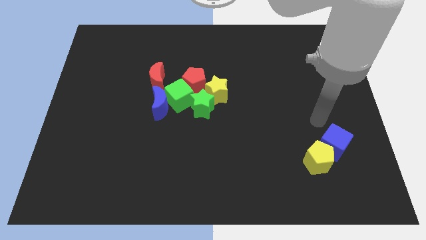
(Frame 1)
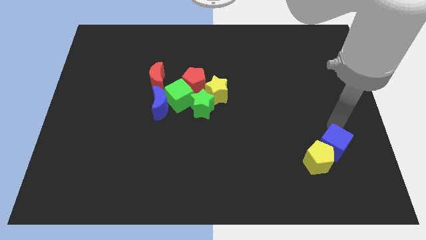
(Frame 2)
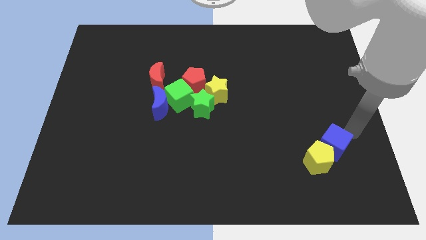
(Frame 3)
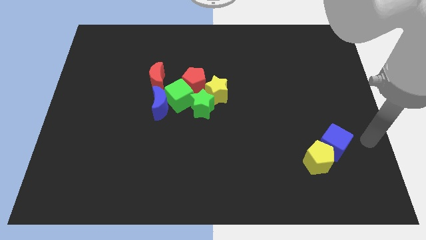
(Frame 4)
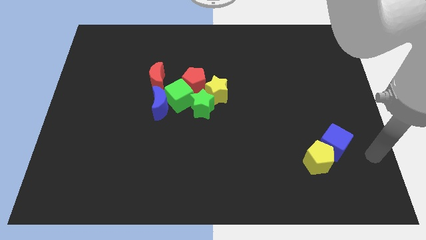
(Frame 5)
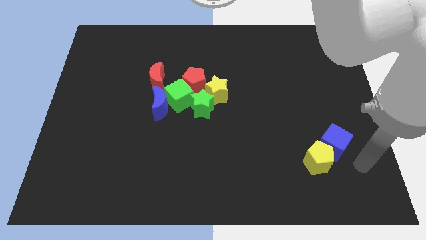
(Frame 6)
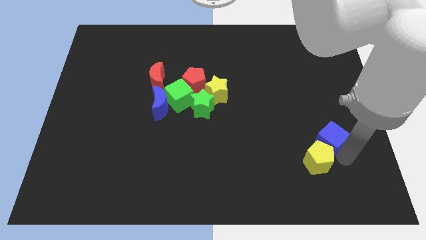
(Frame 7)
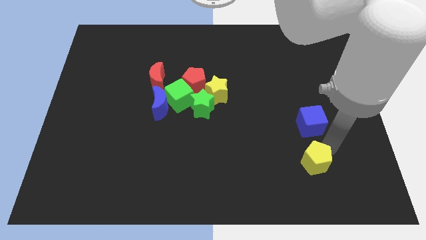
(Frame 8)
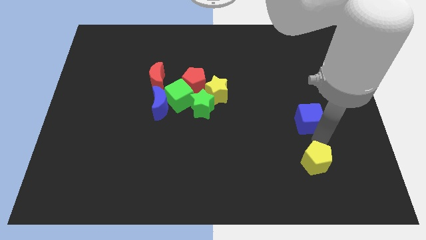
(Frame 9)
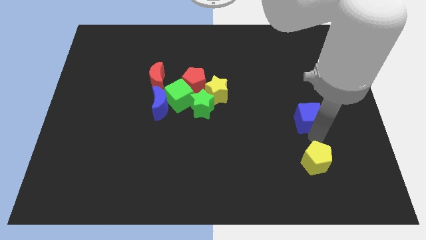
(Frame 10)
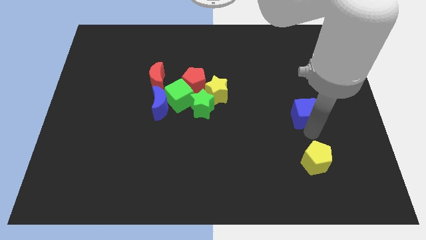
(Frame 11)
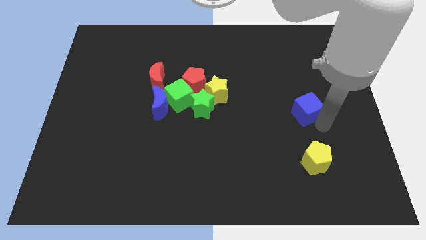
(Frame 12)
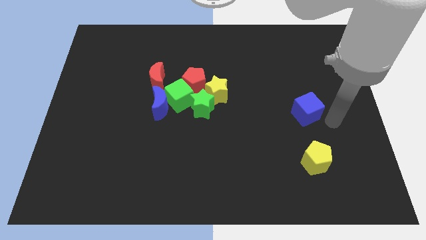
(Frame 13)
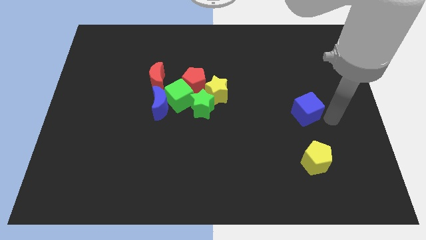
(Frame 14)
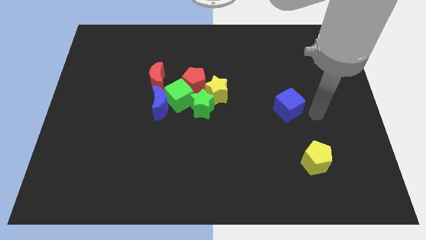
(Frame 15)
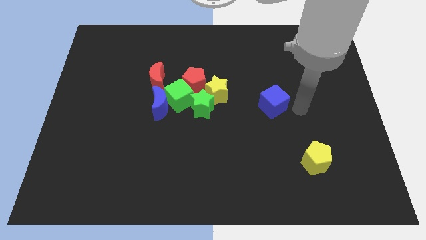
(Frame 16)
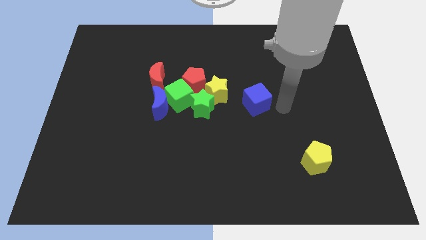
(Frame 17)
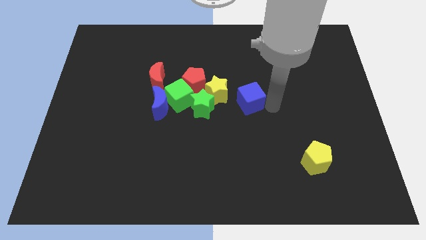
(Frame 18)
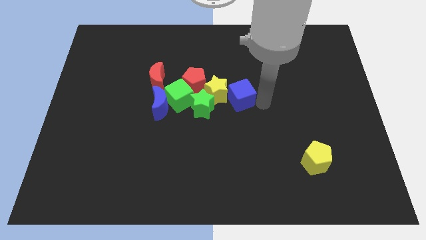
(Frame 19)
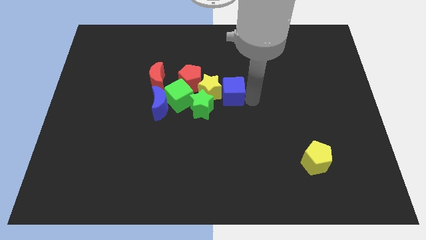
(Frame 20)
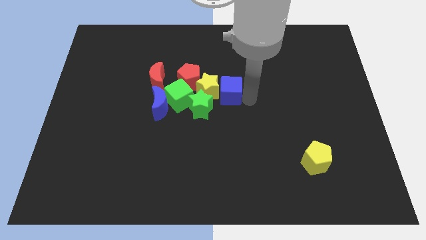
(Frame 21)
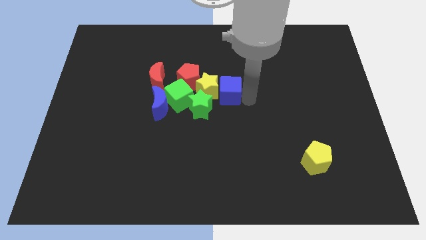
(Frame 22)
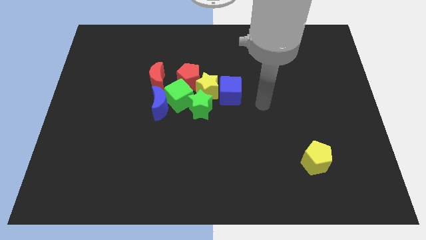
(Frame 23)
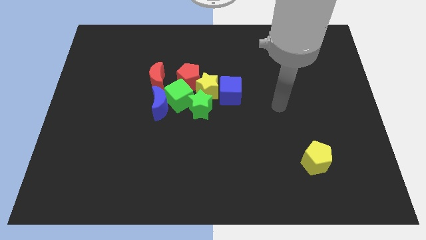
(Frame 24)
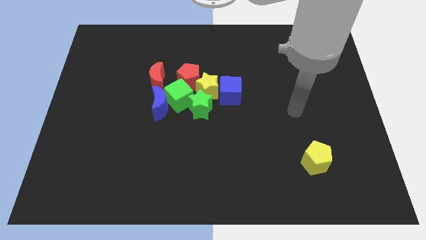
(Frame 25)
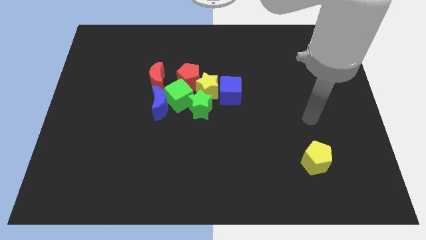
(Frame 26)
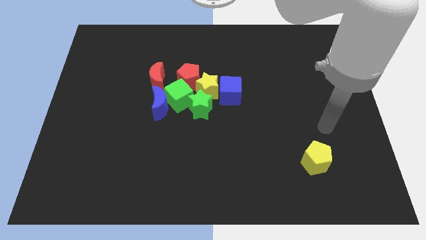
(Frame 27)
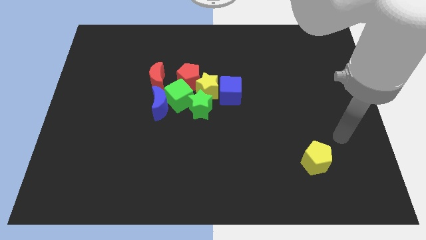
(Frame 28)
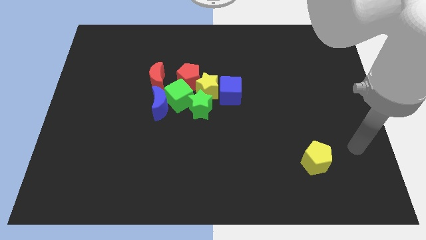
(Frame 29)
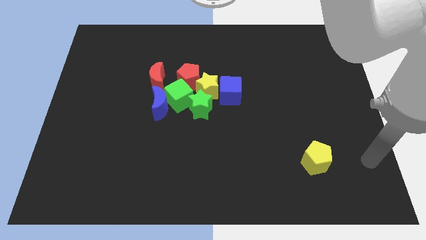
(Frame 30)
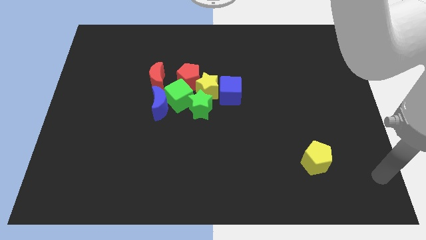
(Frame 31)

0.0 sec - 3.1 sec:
take the blue cube into the right side of the yellow star

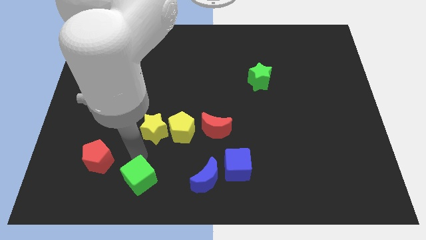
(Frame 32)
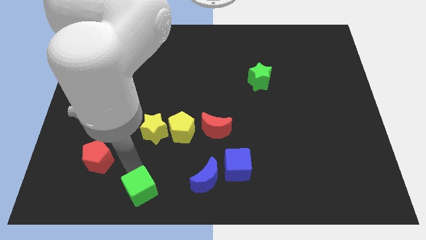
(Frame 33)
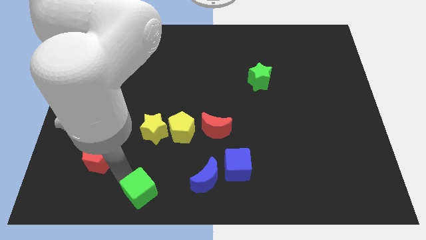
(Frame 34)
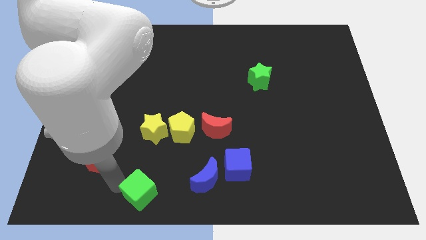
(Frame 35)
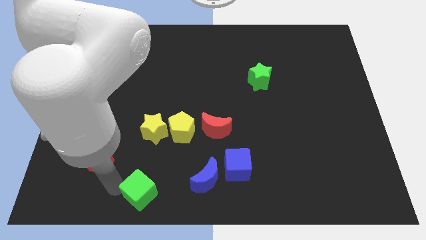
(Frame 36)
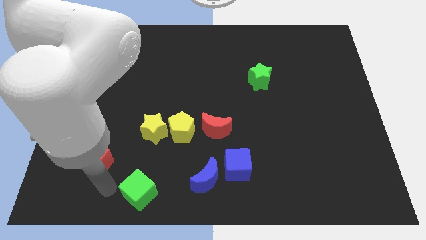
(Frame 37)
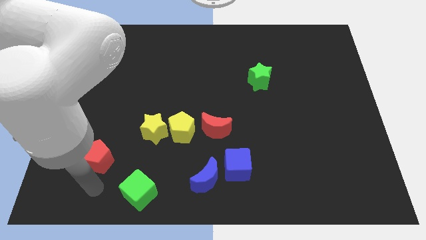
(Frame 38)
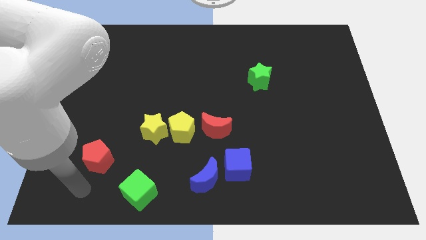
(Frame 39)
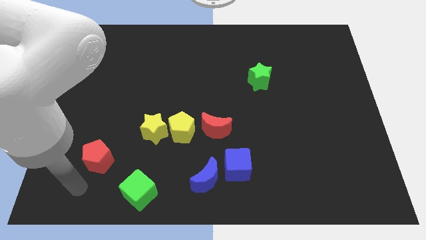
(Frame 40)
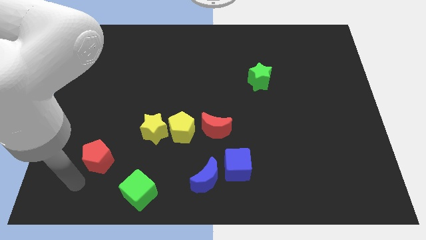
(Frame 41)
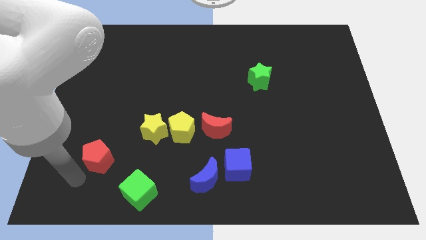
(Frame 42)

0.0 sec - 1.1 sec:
push green cube slightly down

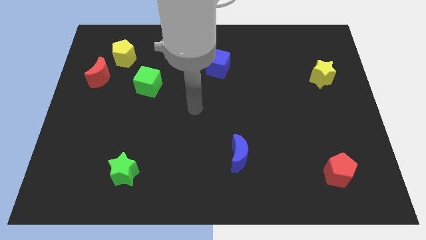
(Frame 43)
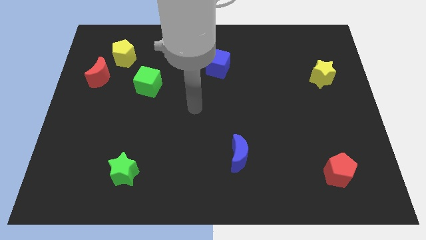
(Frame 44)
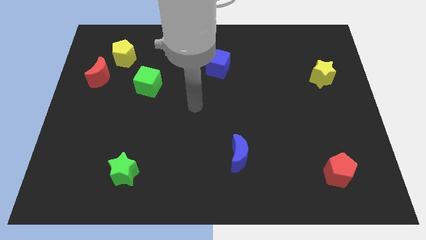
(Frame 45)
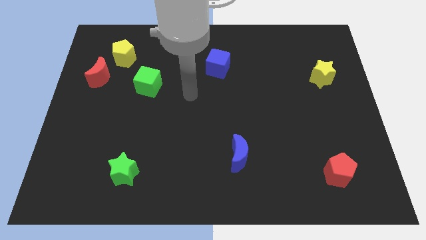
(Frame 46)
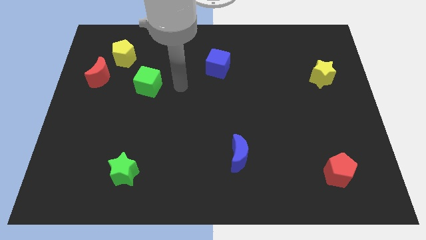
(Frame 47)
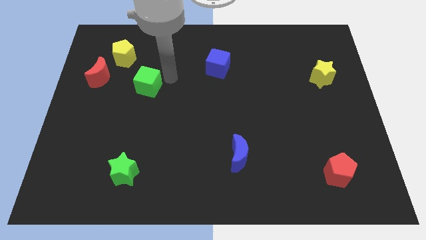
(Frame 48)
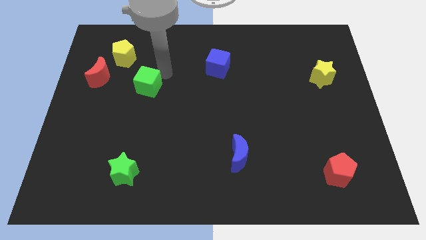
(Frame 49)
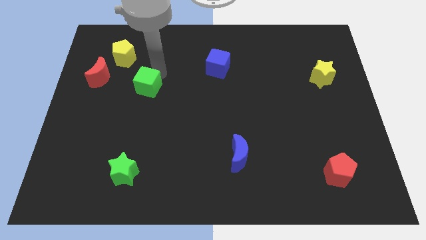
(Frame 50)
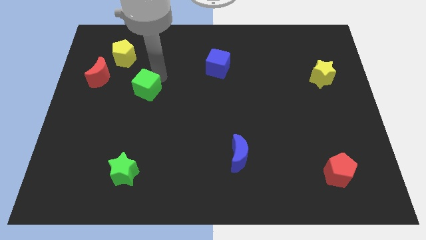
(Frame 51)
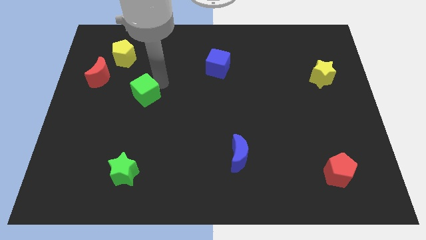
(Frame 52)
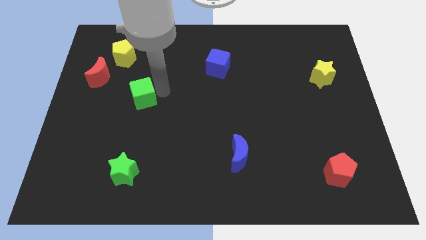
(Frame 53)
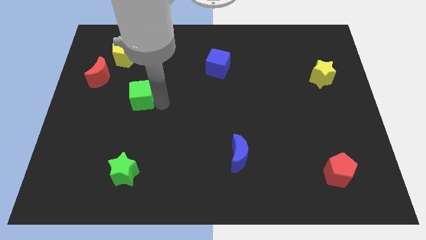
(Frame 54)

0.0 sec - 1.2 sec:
push the green cube towards the top side of the green star

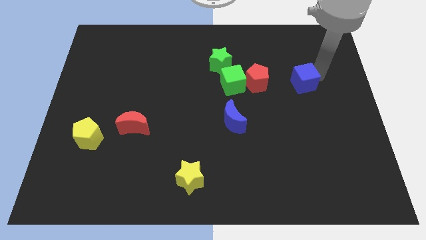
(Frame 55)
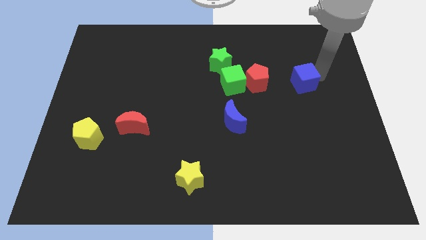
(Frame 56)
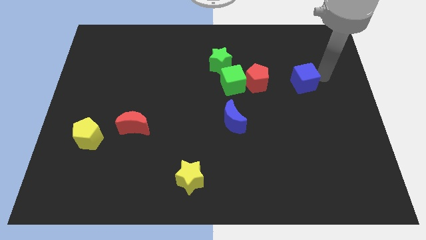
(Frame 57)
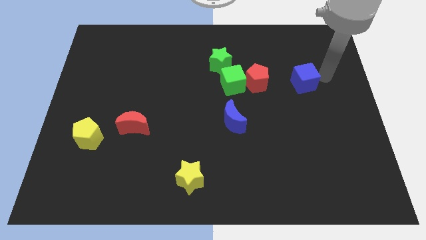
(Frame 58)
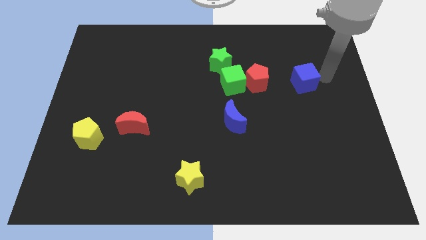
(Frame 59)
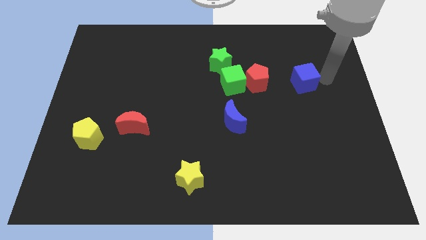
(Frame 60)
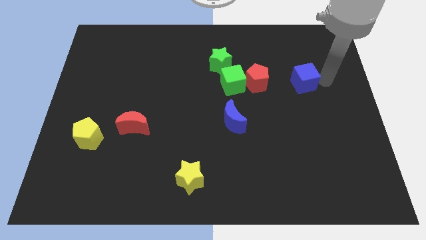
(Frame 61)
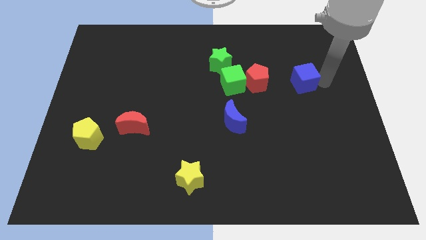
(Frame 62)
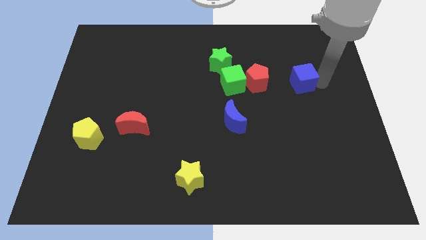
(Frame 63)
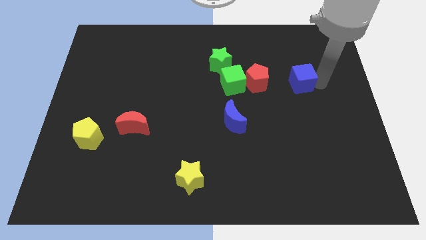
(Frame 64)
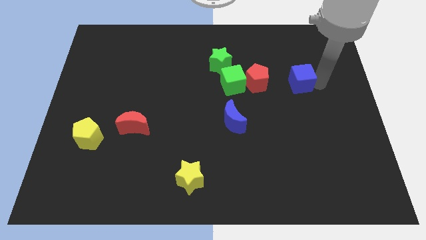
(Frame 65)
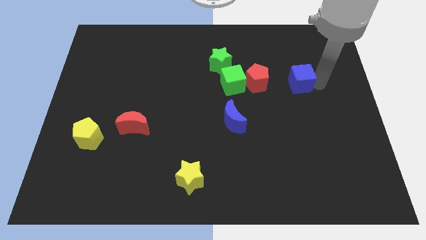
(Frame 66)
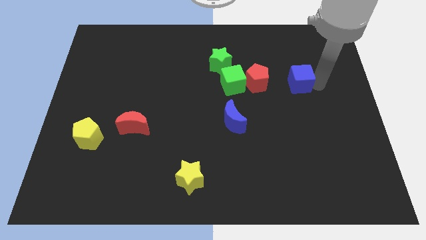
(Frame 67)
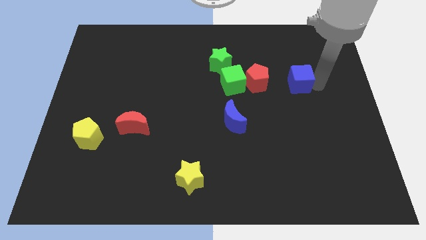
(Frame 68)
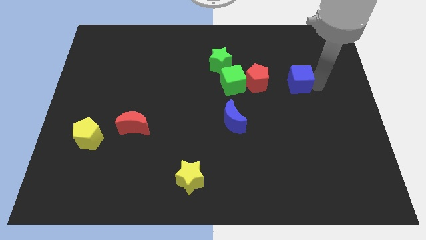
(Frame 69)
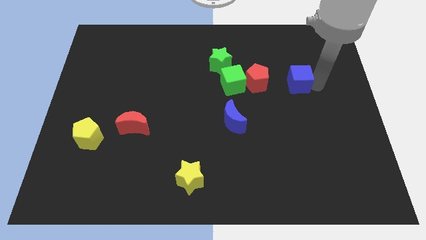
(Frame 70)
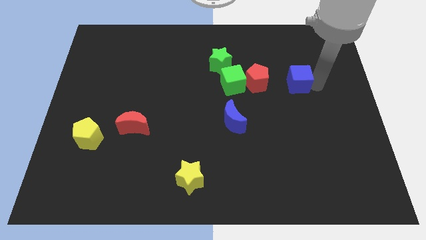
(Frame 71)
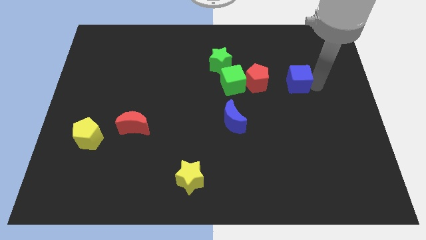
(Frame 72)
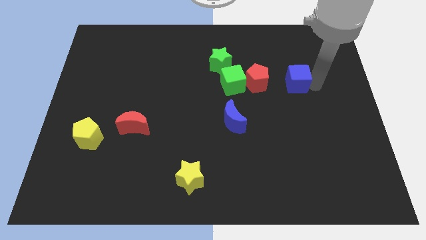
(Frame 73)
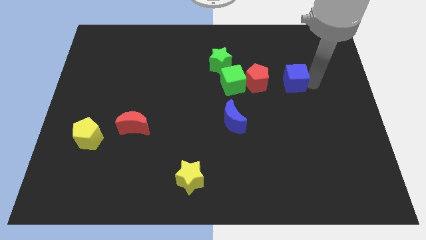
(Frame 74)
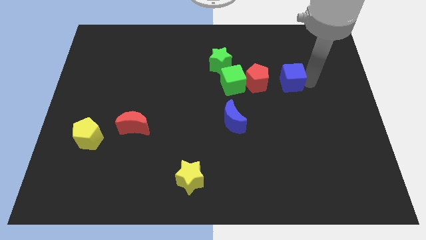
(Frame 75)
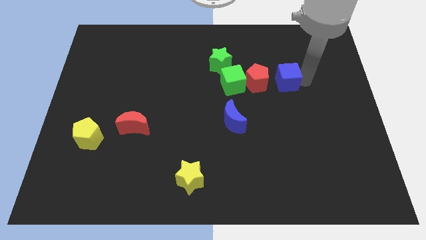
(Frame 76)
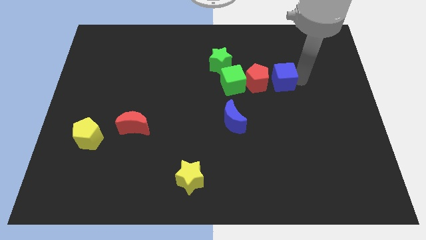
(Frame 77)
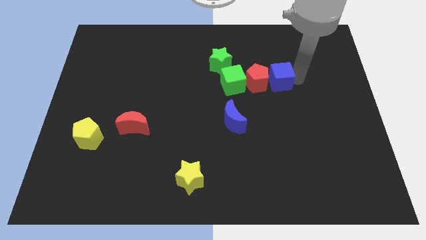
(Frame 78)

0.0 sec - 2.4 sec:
move the blue cube into the red pentagon

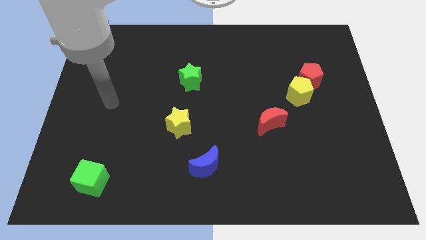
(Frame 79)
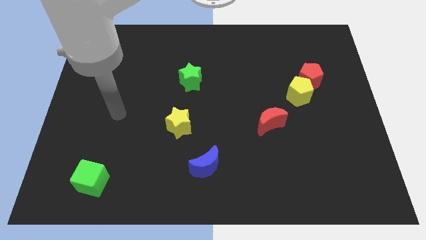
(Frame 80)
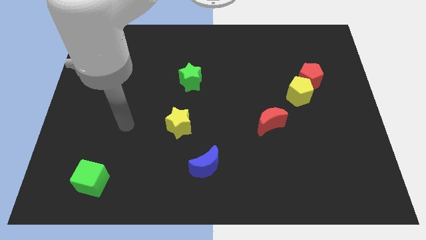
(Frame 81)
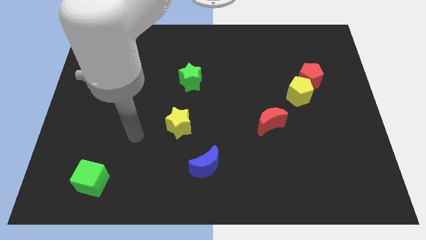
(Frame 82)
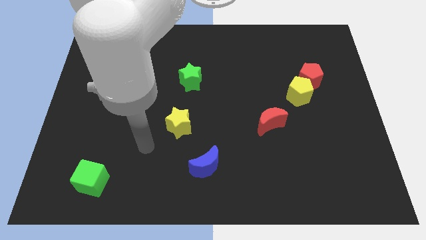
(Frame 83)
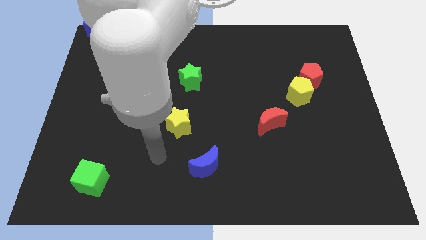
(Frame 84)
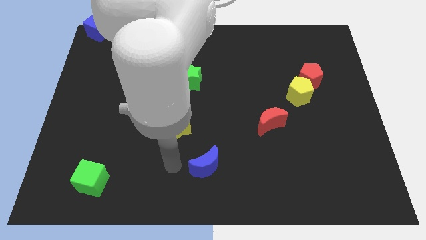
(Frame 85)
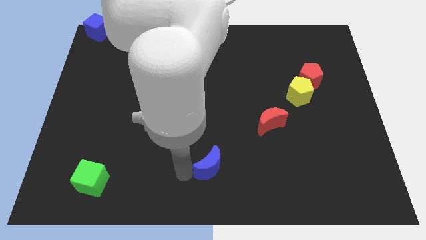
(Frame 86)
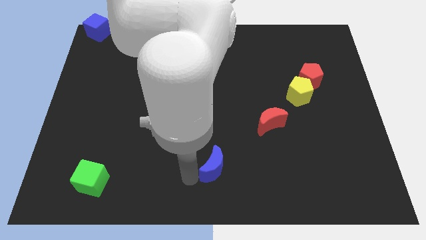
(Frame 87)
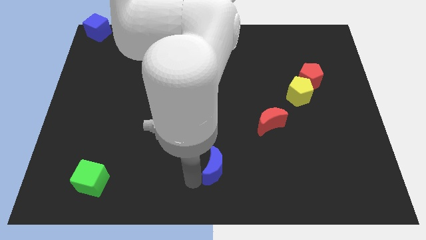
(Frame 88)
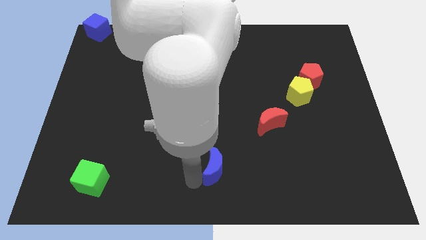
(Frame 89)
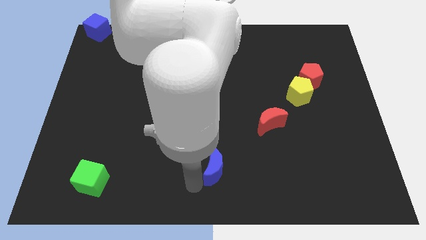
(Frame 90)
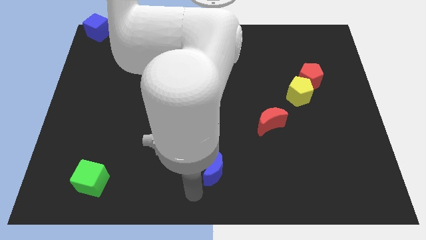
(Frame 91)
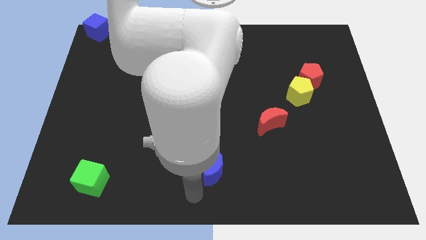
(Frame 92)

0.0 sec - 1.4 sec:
touch the blue moon
